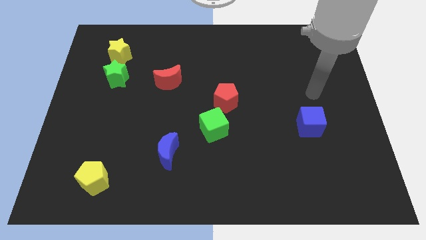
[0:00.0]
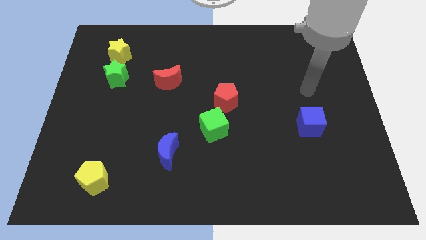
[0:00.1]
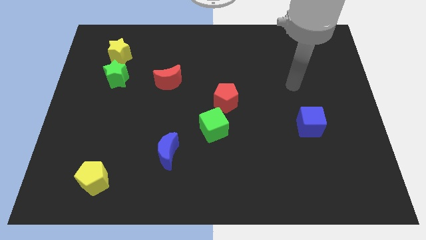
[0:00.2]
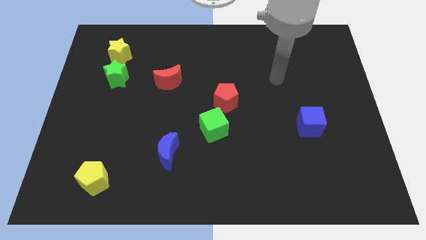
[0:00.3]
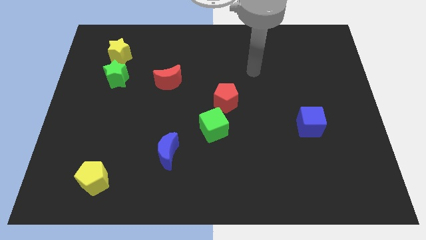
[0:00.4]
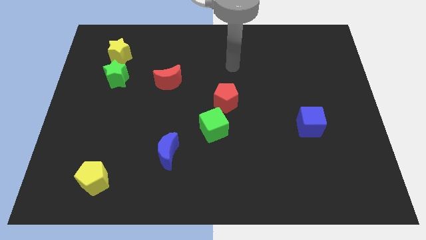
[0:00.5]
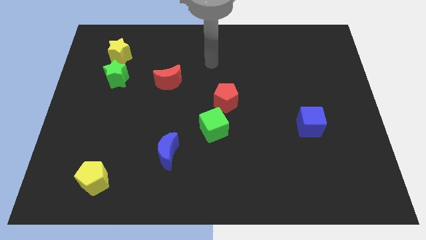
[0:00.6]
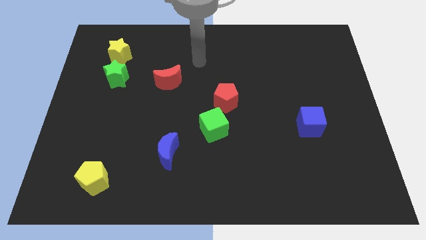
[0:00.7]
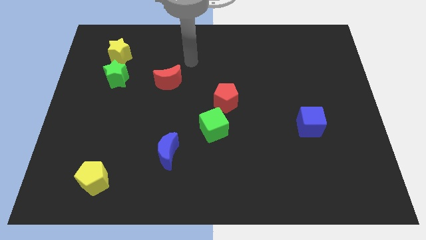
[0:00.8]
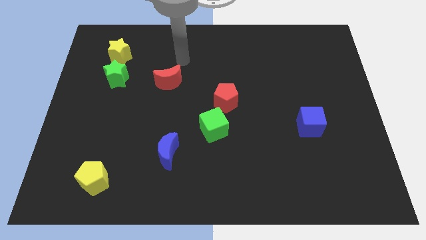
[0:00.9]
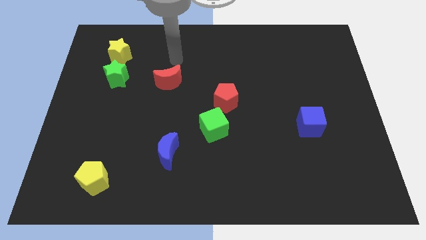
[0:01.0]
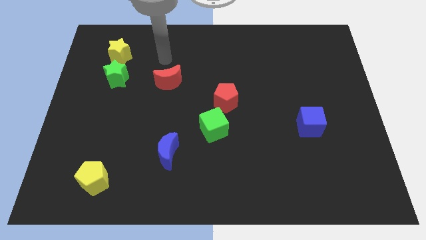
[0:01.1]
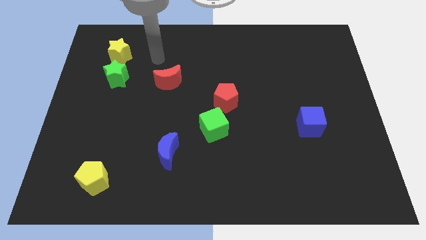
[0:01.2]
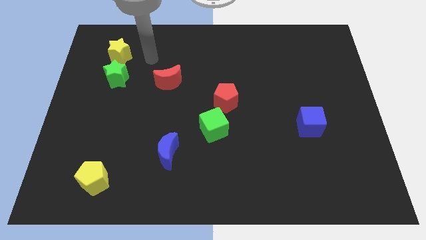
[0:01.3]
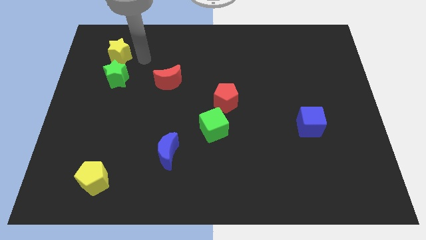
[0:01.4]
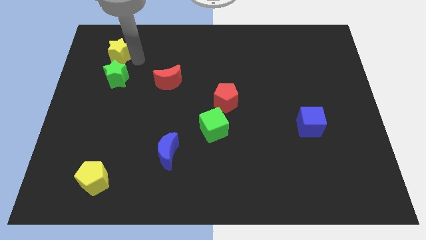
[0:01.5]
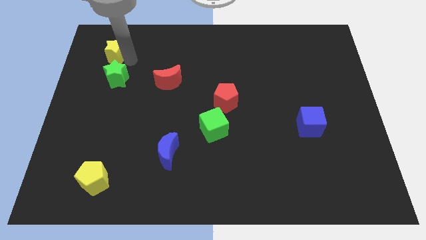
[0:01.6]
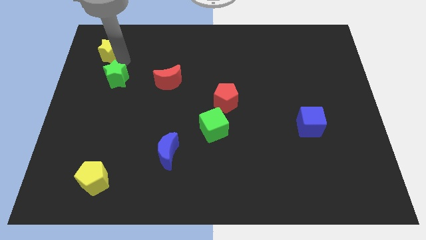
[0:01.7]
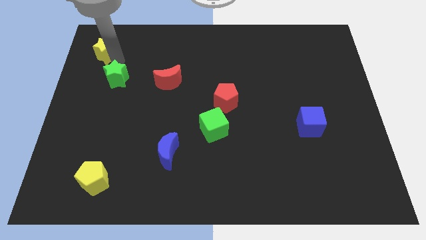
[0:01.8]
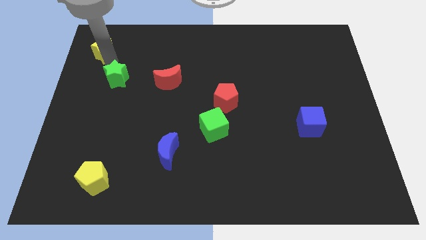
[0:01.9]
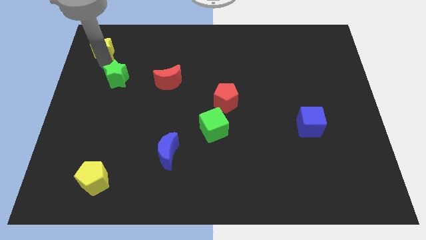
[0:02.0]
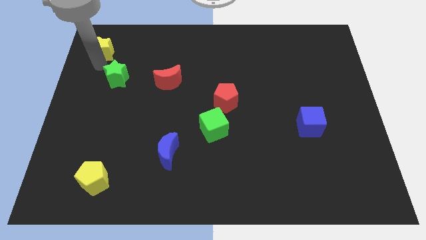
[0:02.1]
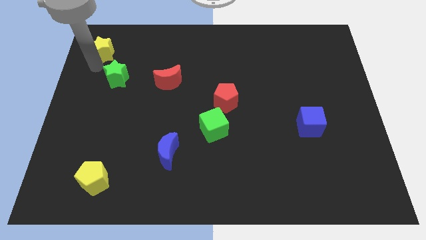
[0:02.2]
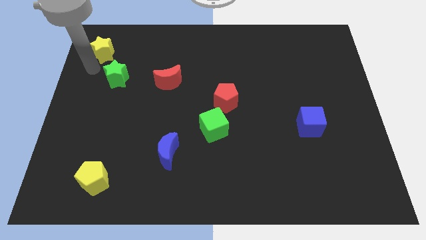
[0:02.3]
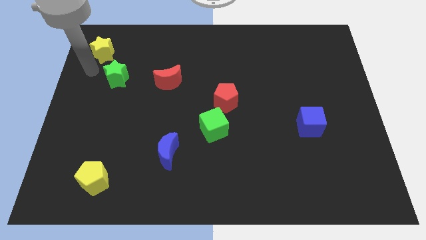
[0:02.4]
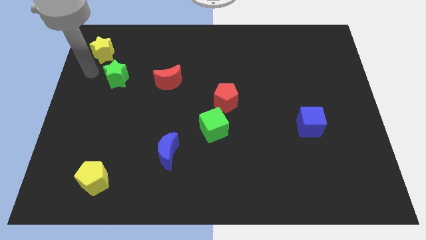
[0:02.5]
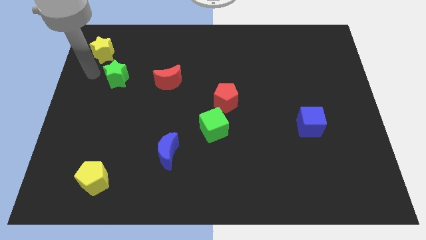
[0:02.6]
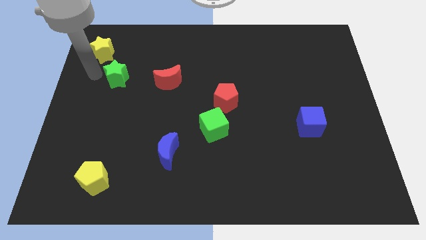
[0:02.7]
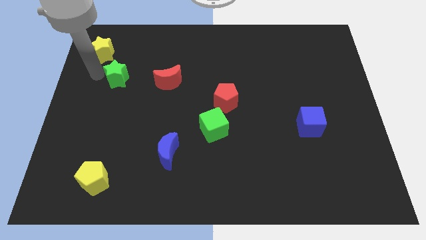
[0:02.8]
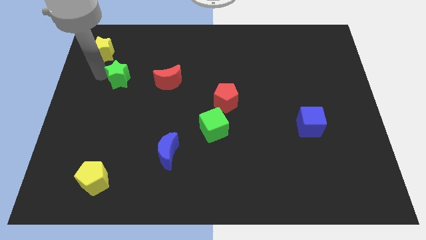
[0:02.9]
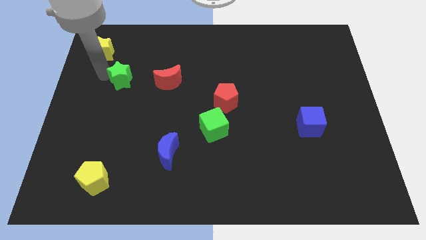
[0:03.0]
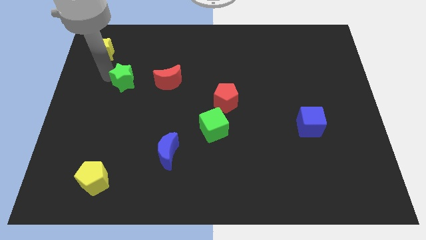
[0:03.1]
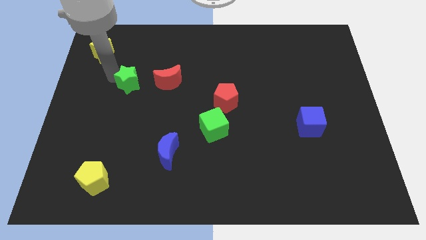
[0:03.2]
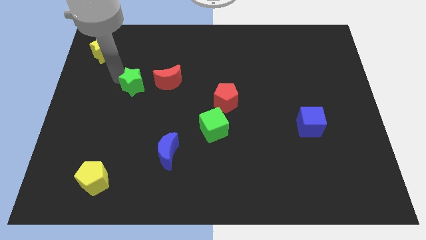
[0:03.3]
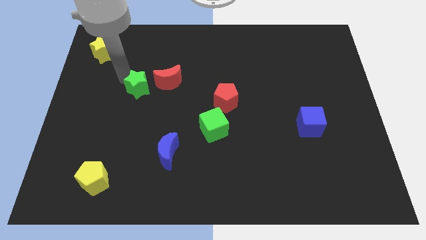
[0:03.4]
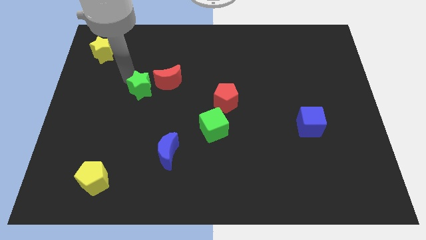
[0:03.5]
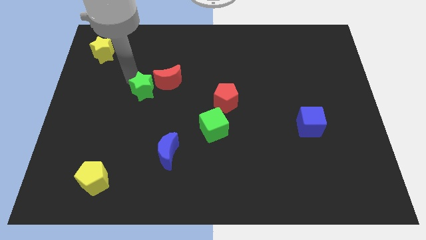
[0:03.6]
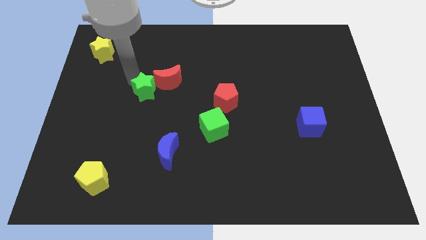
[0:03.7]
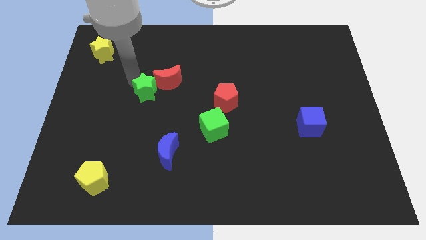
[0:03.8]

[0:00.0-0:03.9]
push the green star close to the red moon

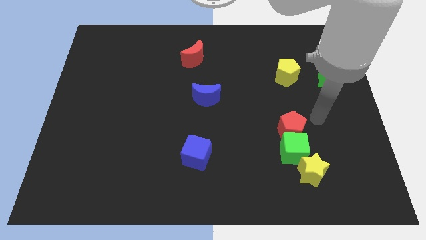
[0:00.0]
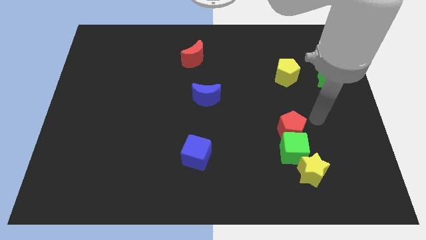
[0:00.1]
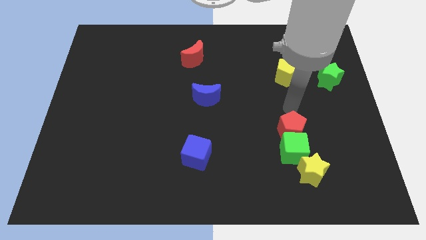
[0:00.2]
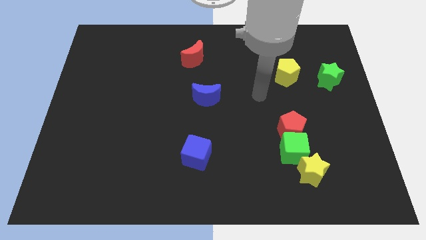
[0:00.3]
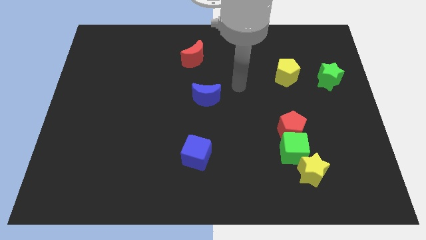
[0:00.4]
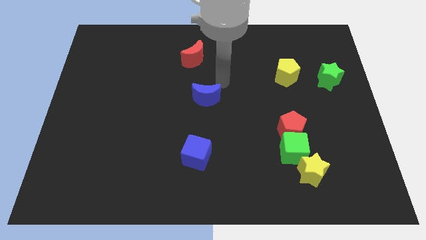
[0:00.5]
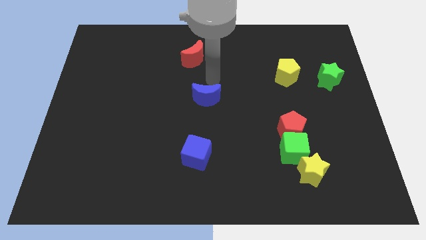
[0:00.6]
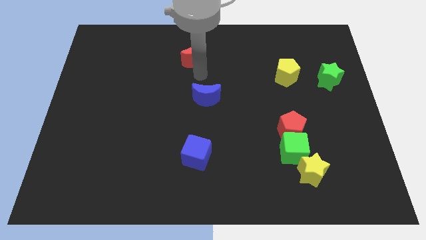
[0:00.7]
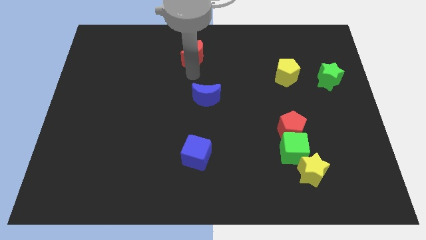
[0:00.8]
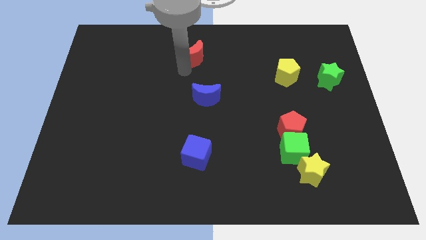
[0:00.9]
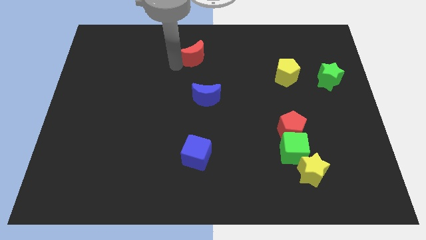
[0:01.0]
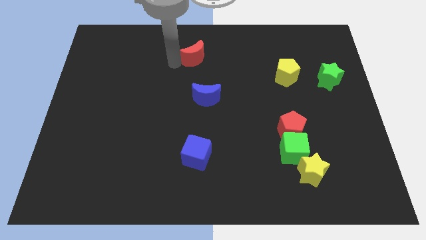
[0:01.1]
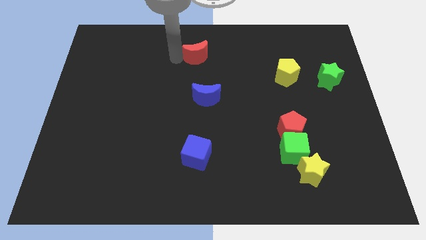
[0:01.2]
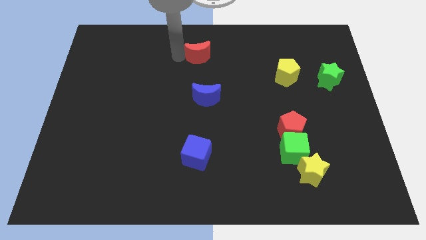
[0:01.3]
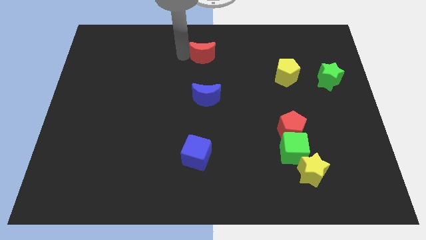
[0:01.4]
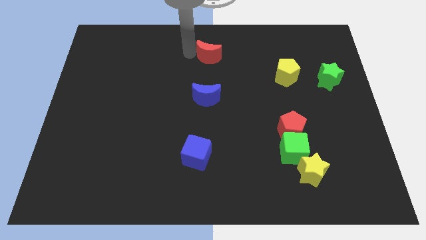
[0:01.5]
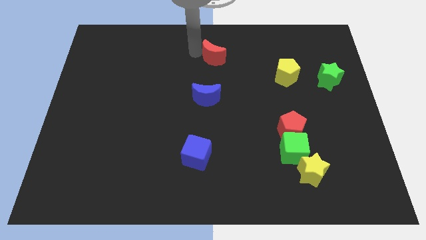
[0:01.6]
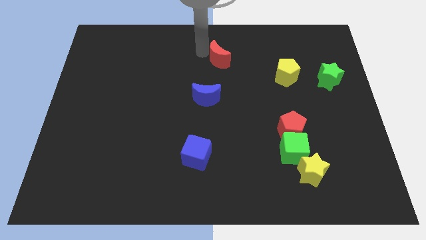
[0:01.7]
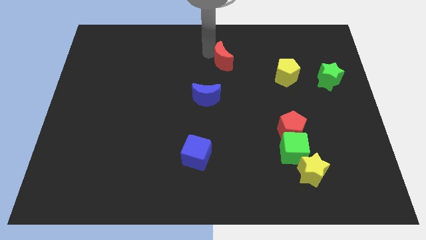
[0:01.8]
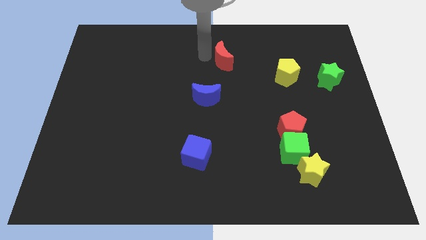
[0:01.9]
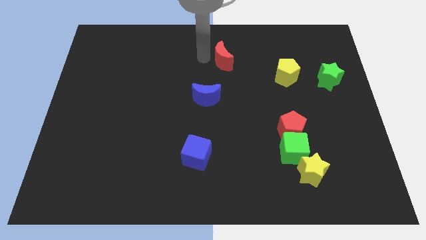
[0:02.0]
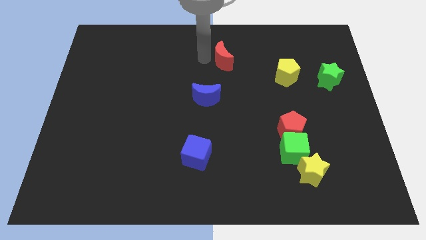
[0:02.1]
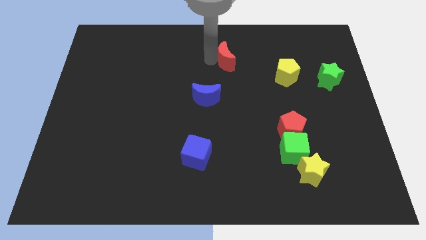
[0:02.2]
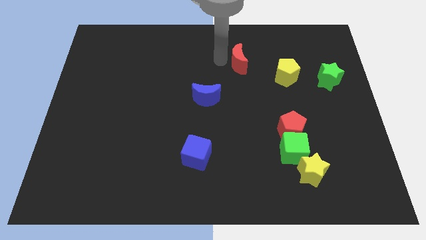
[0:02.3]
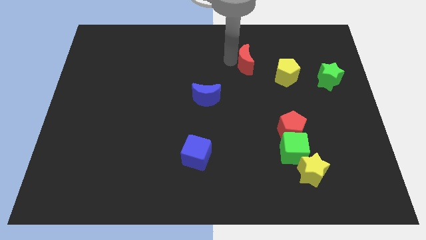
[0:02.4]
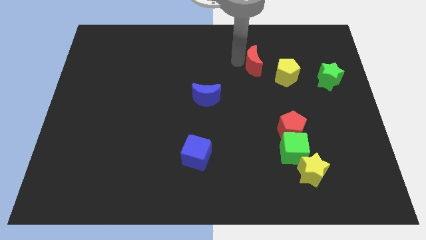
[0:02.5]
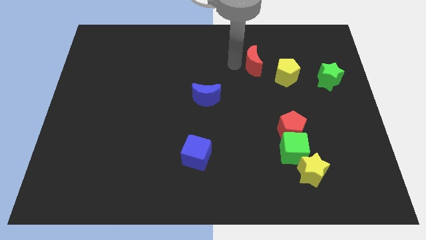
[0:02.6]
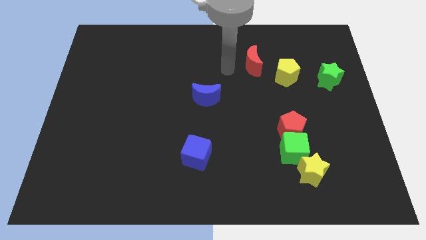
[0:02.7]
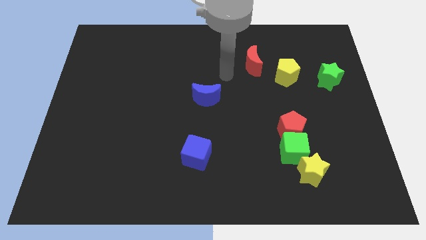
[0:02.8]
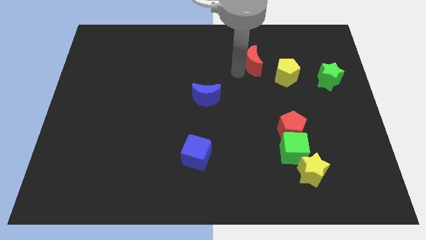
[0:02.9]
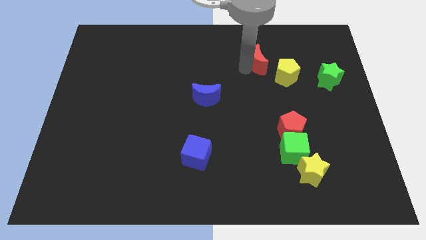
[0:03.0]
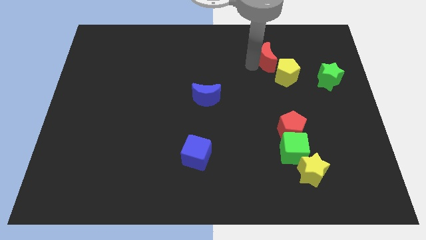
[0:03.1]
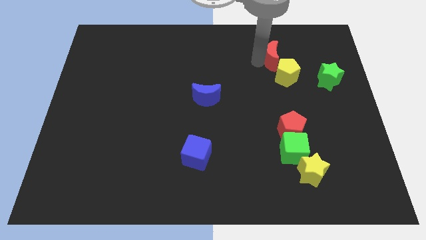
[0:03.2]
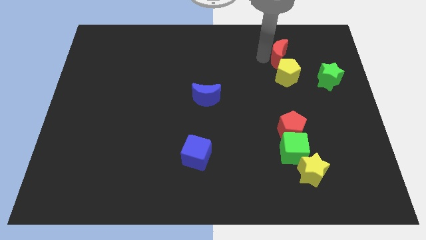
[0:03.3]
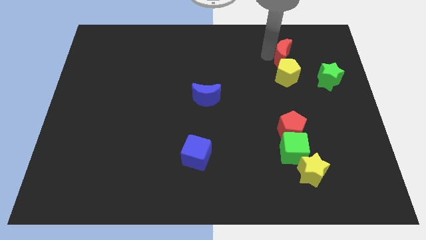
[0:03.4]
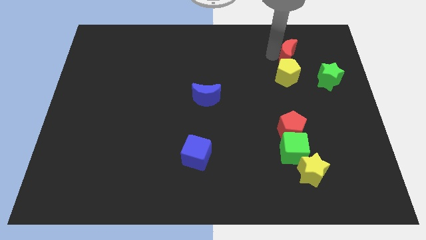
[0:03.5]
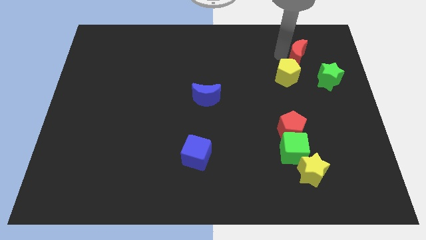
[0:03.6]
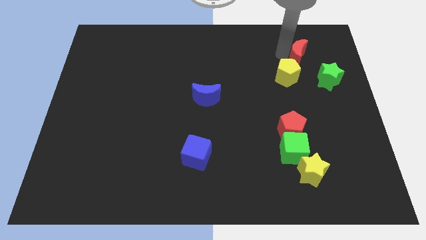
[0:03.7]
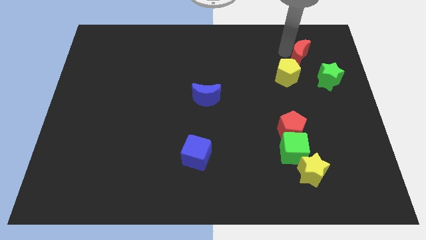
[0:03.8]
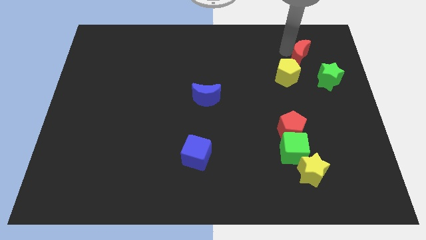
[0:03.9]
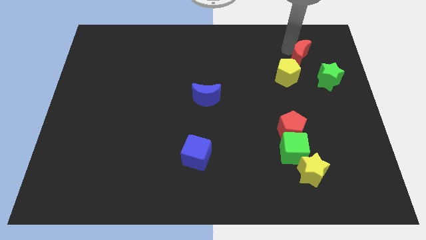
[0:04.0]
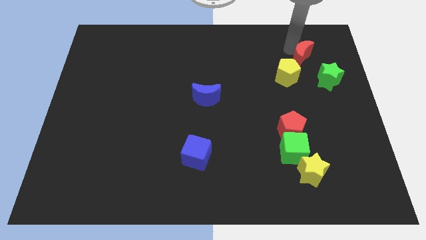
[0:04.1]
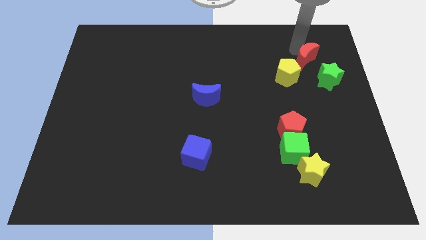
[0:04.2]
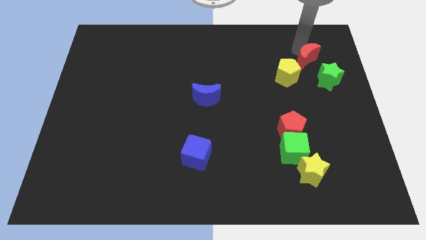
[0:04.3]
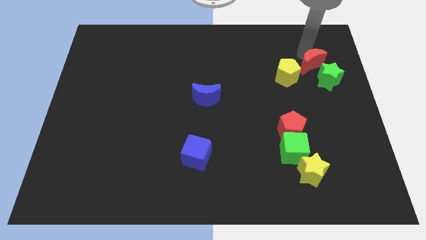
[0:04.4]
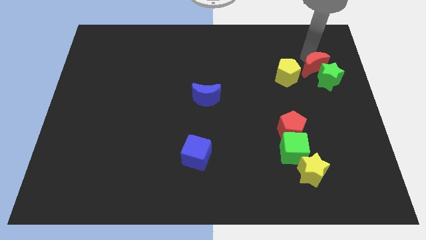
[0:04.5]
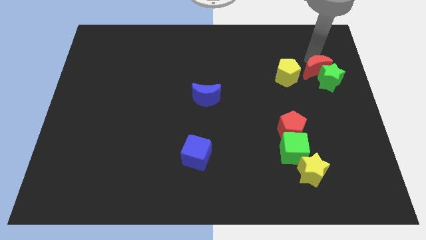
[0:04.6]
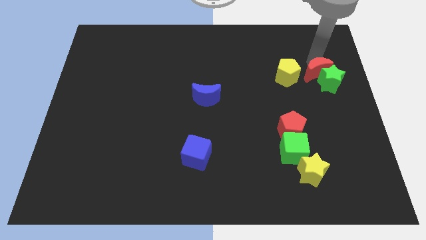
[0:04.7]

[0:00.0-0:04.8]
move the red moon to the green star

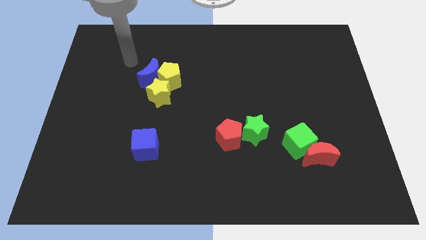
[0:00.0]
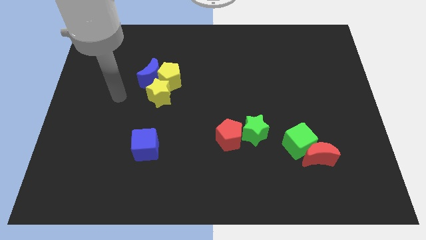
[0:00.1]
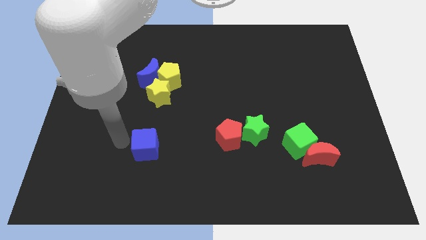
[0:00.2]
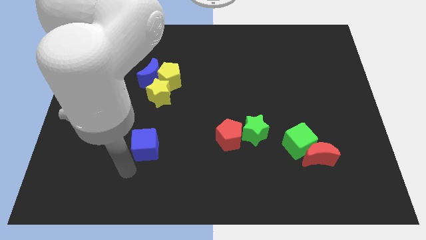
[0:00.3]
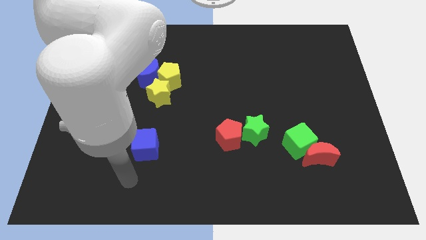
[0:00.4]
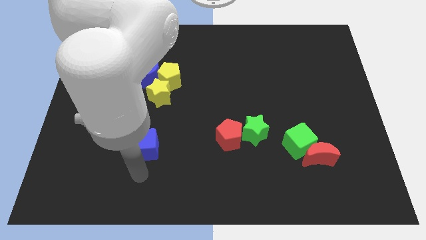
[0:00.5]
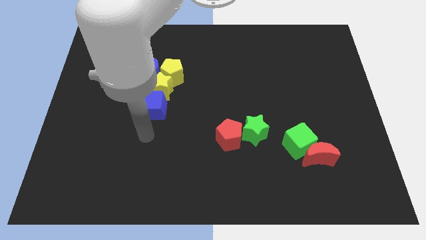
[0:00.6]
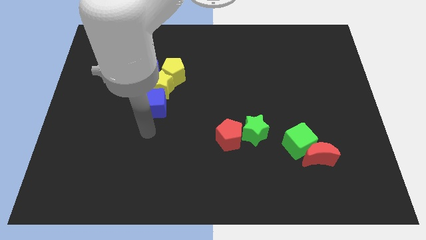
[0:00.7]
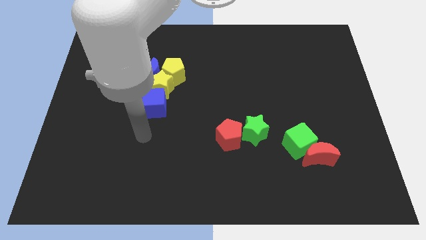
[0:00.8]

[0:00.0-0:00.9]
push the blue cube close to the yellow star
